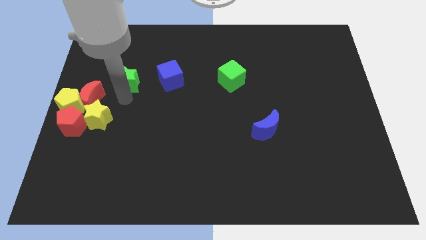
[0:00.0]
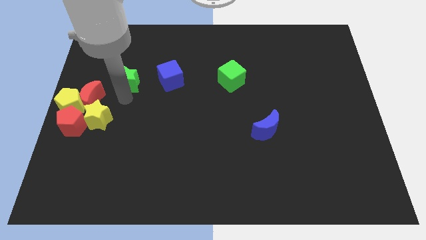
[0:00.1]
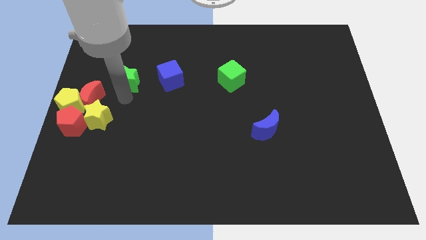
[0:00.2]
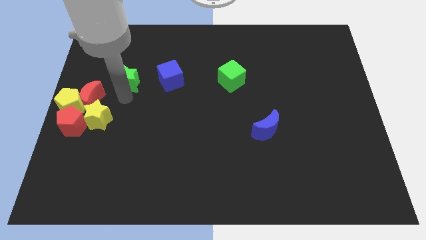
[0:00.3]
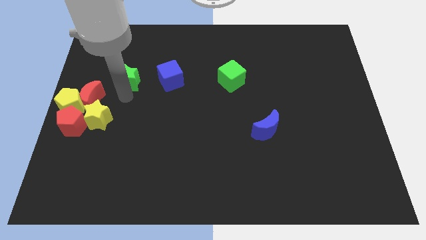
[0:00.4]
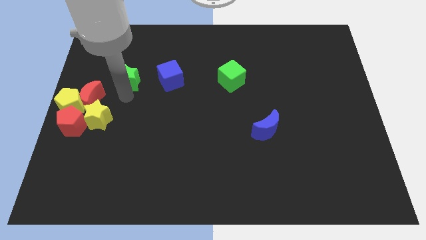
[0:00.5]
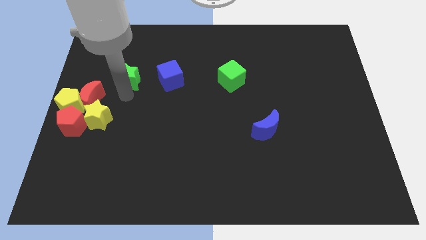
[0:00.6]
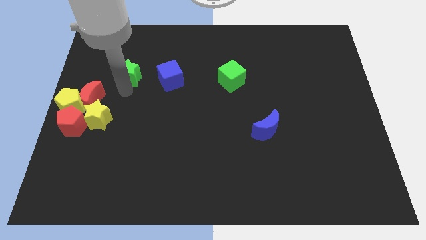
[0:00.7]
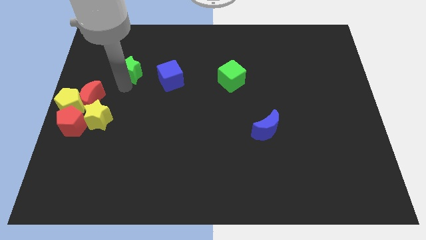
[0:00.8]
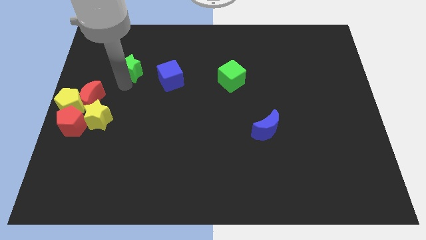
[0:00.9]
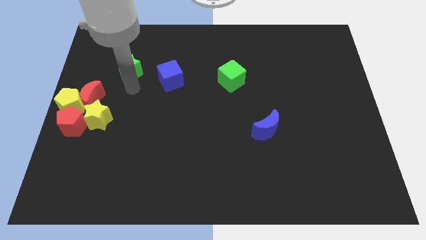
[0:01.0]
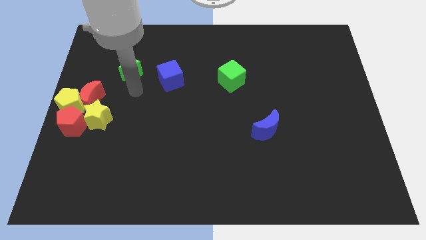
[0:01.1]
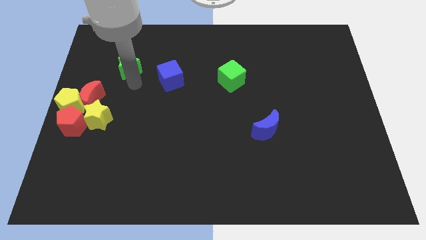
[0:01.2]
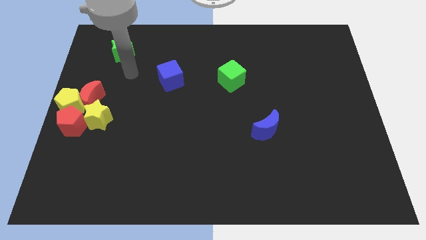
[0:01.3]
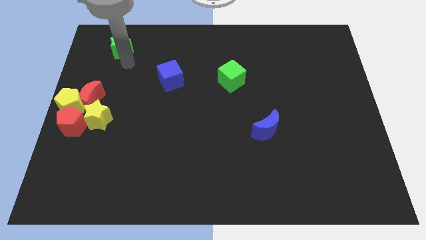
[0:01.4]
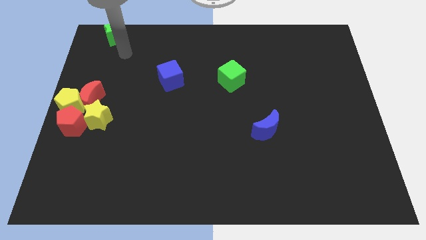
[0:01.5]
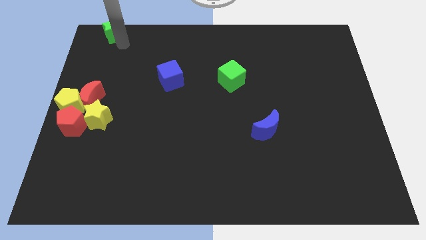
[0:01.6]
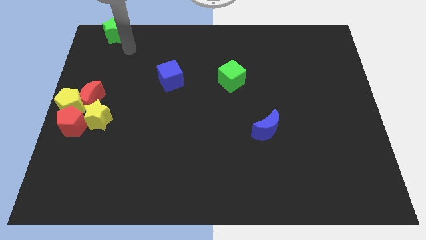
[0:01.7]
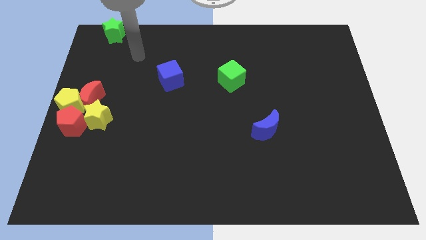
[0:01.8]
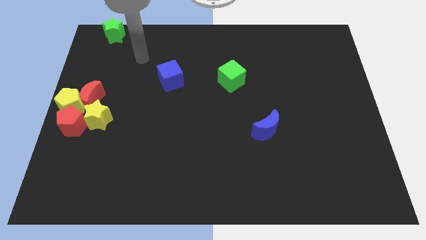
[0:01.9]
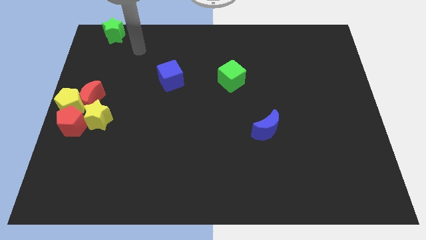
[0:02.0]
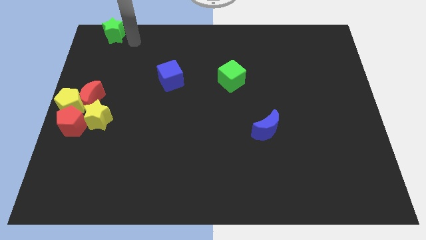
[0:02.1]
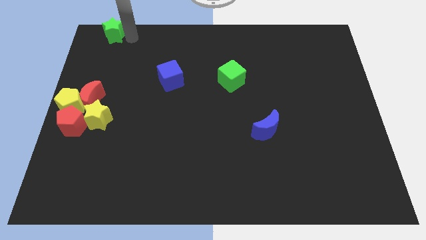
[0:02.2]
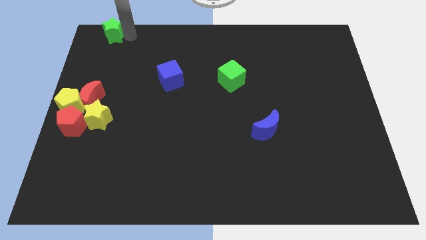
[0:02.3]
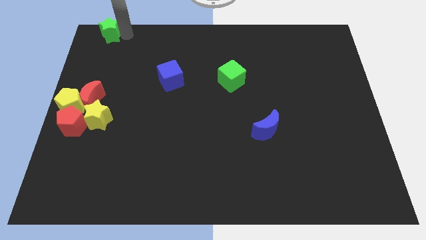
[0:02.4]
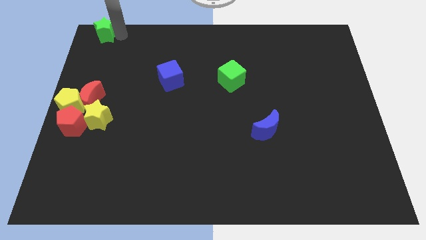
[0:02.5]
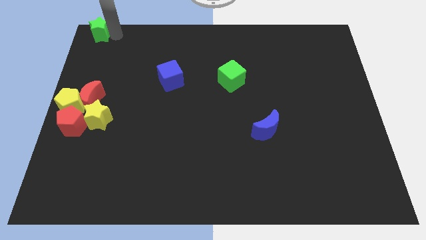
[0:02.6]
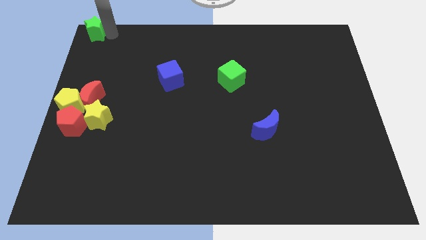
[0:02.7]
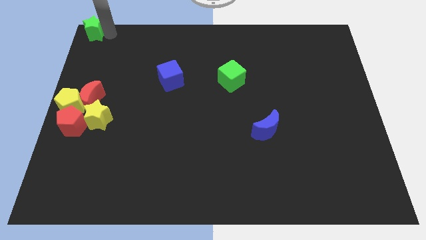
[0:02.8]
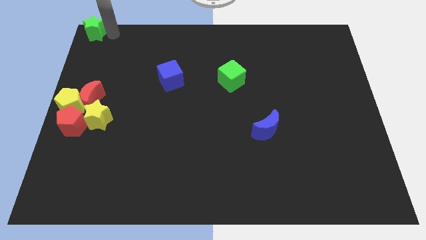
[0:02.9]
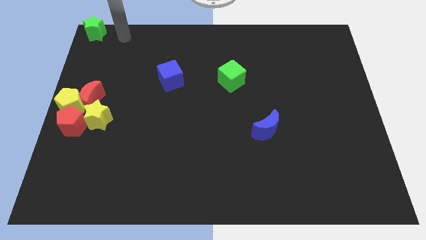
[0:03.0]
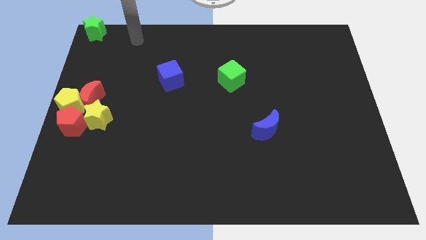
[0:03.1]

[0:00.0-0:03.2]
move the green star left corner to the top of the board

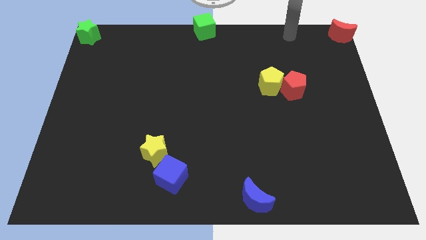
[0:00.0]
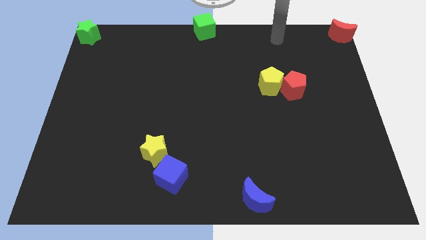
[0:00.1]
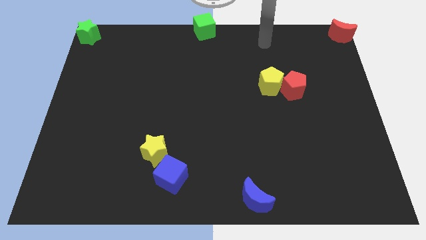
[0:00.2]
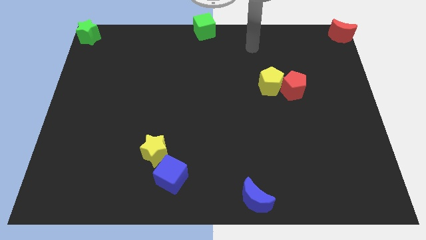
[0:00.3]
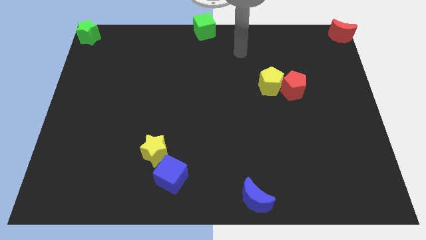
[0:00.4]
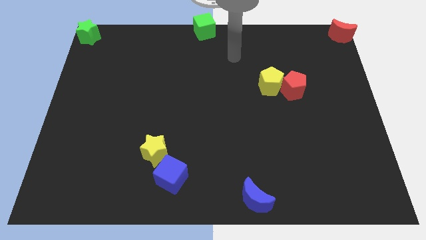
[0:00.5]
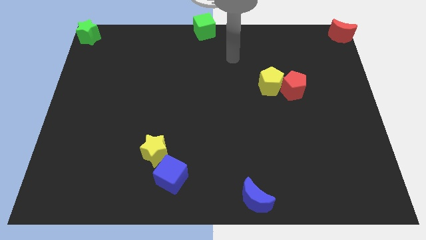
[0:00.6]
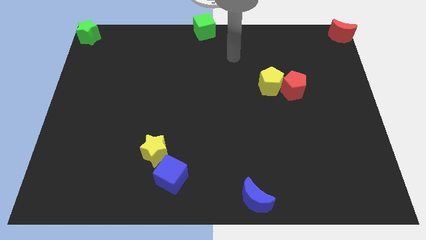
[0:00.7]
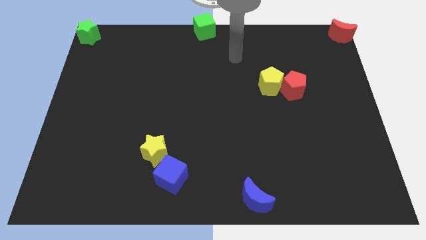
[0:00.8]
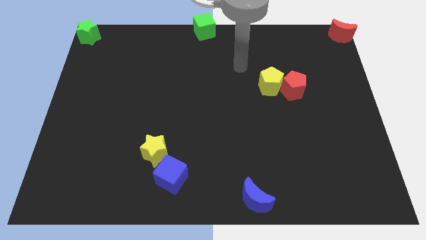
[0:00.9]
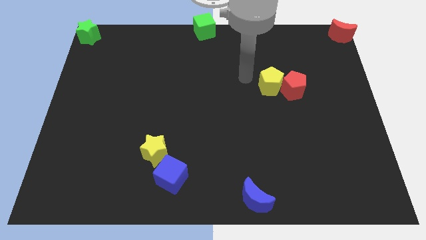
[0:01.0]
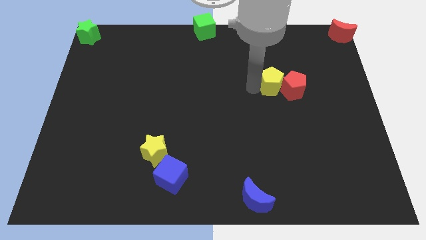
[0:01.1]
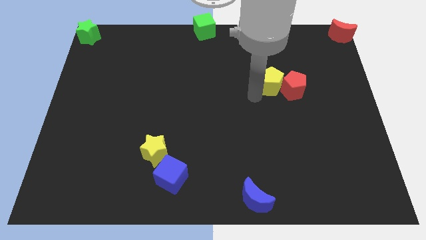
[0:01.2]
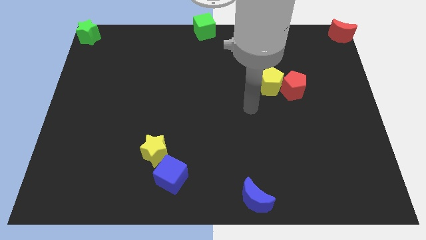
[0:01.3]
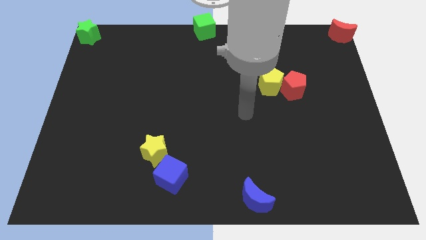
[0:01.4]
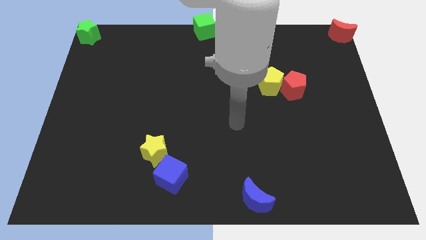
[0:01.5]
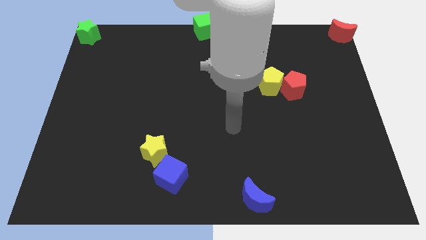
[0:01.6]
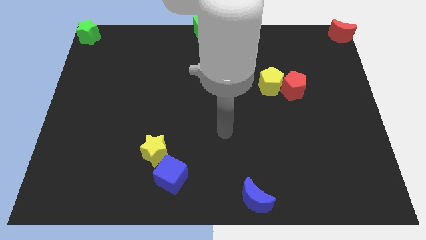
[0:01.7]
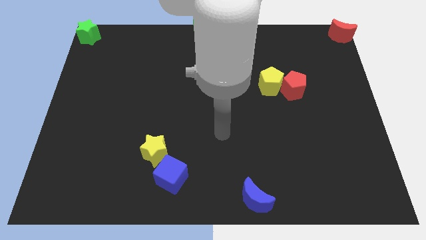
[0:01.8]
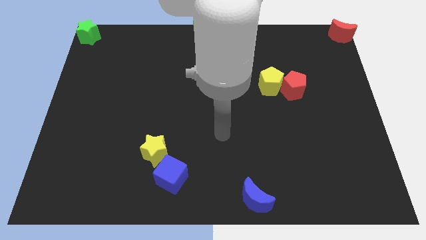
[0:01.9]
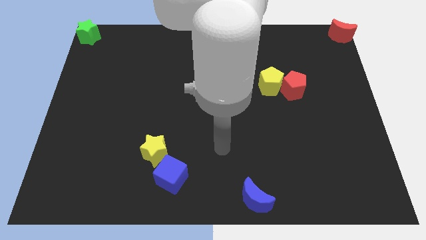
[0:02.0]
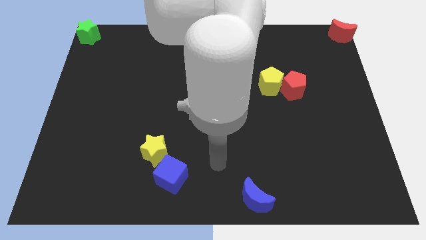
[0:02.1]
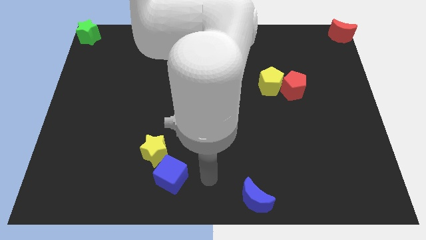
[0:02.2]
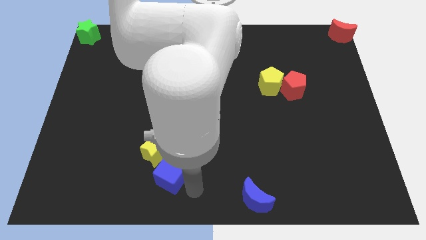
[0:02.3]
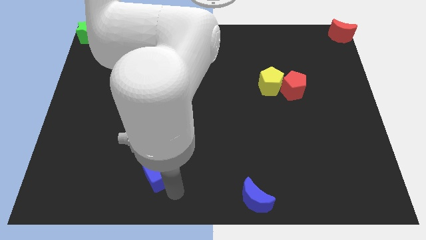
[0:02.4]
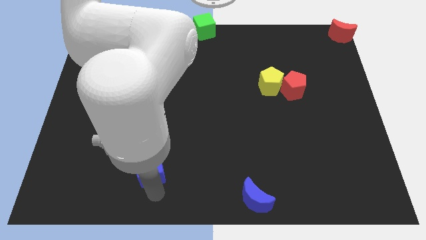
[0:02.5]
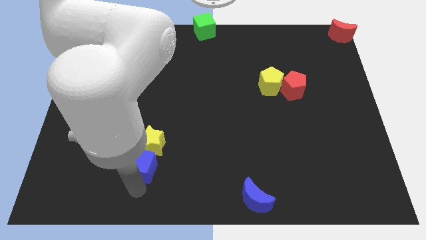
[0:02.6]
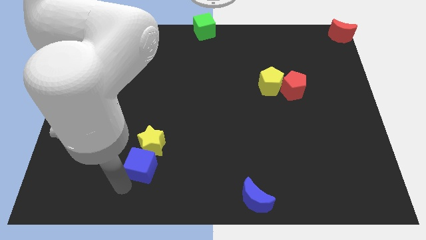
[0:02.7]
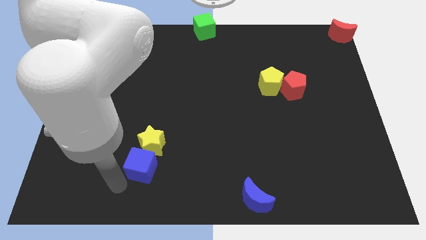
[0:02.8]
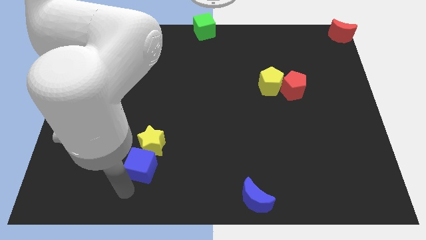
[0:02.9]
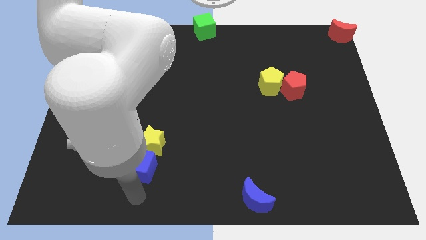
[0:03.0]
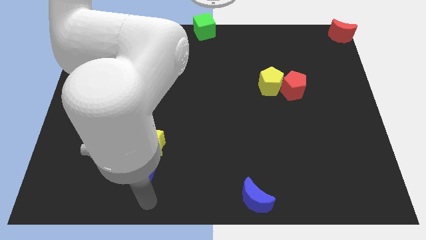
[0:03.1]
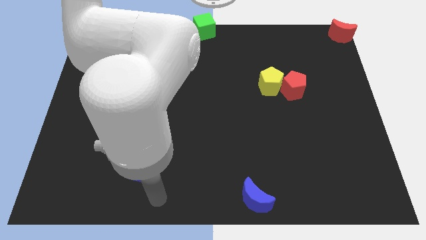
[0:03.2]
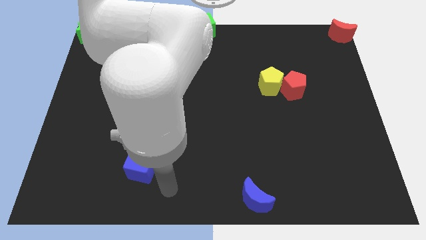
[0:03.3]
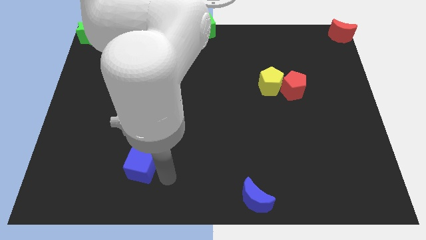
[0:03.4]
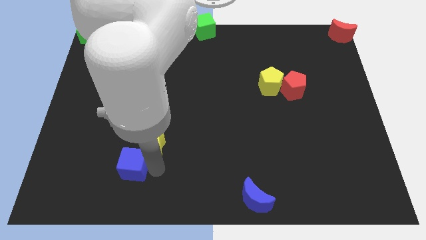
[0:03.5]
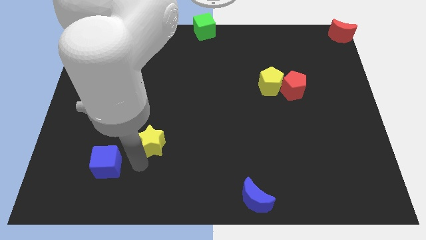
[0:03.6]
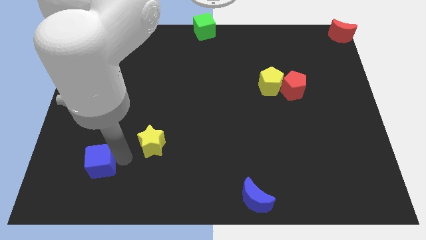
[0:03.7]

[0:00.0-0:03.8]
move the blue cube towards the left side of the board

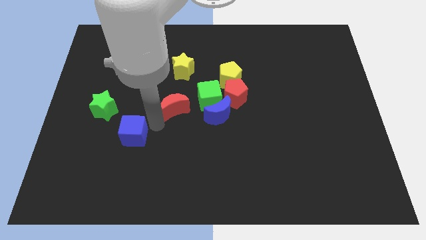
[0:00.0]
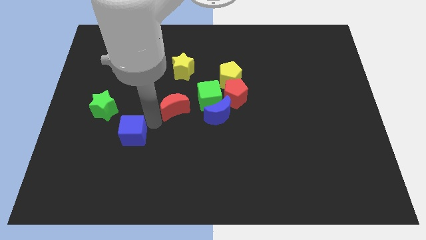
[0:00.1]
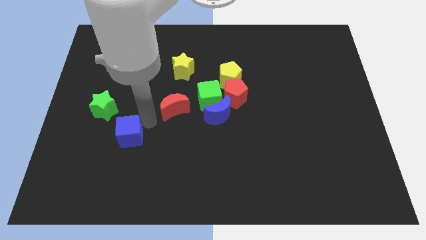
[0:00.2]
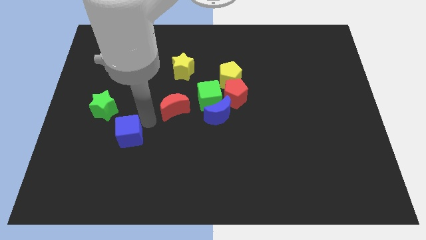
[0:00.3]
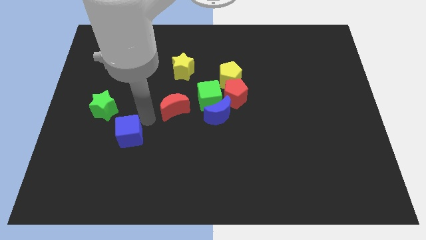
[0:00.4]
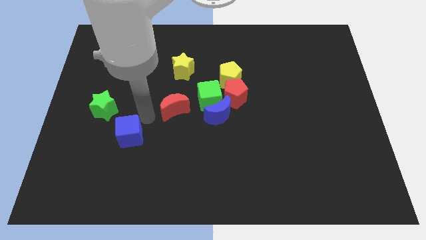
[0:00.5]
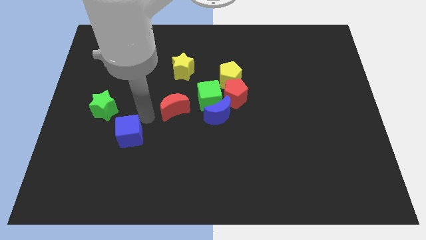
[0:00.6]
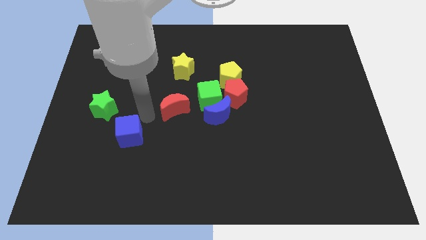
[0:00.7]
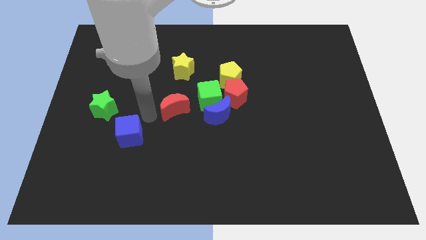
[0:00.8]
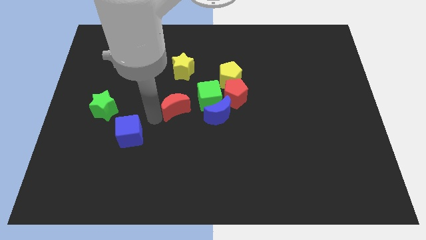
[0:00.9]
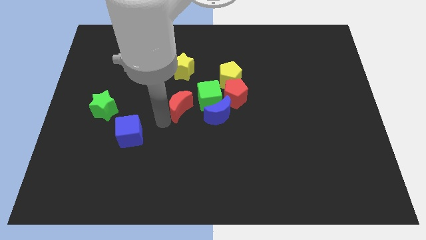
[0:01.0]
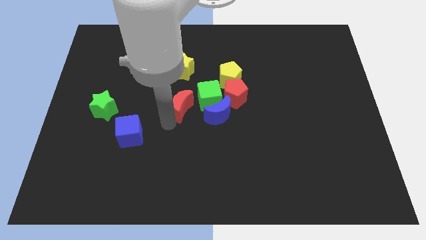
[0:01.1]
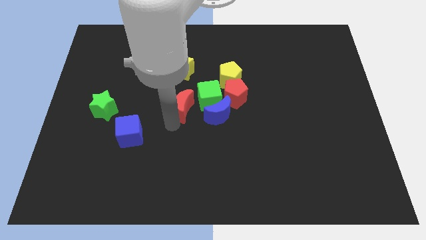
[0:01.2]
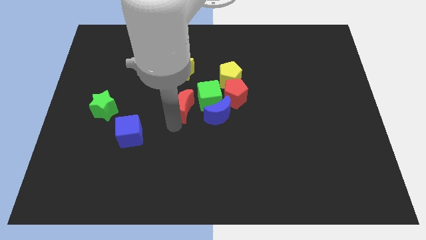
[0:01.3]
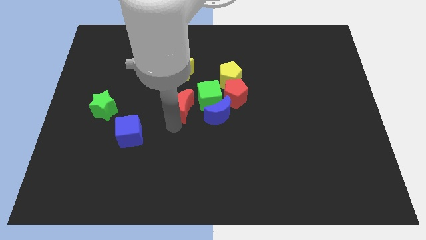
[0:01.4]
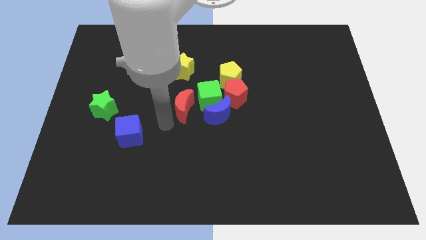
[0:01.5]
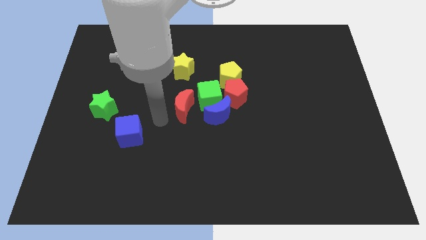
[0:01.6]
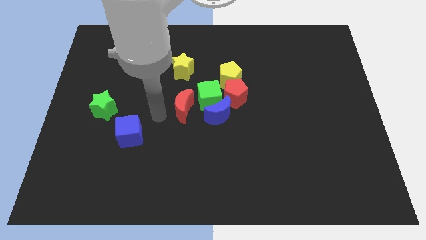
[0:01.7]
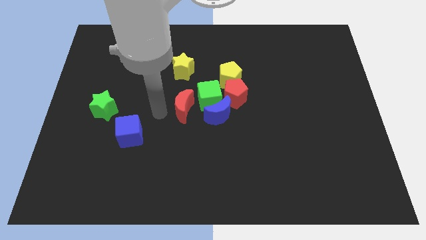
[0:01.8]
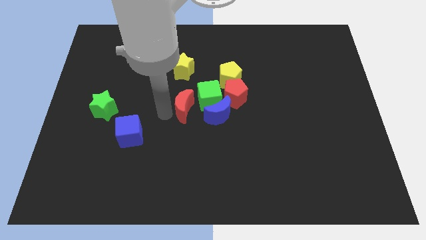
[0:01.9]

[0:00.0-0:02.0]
move the red crescent to the left of green cube
